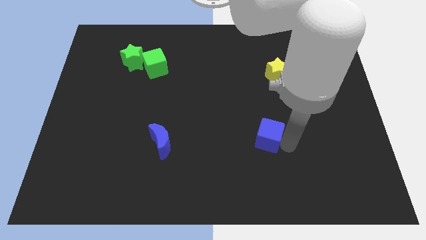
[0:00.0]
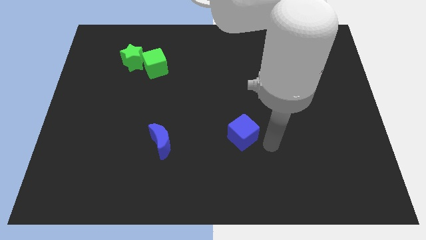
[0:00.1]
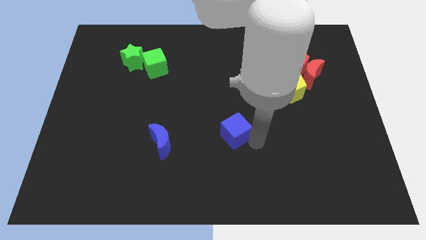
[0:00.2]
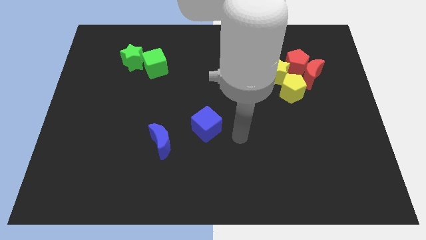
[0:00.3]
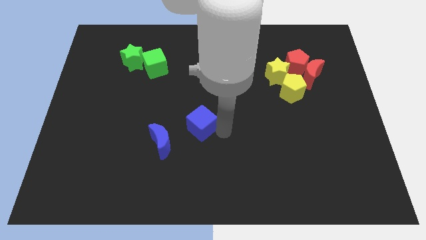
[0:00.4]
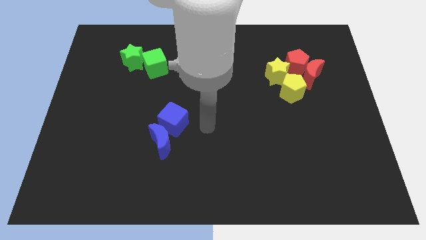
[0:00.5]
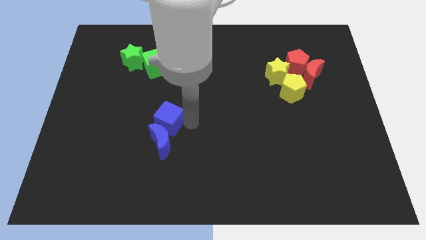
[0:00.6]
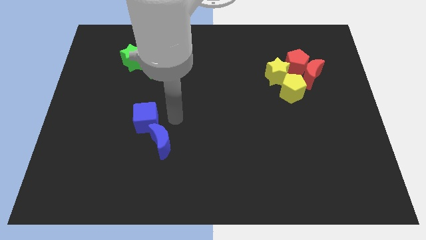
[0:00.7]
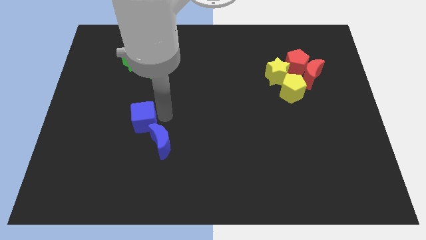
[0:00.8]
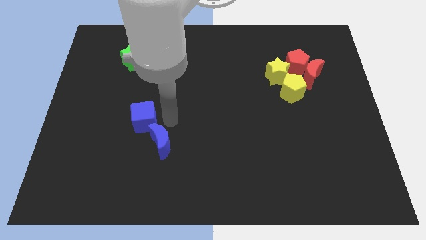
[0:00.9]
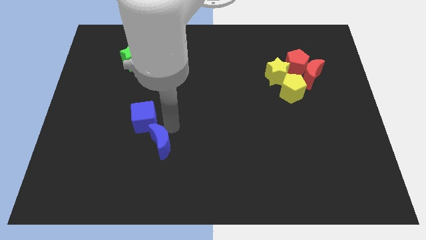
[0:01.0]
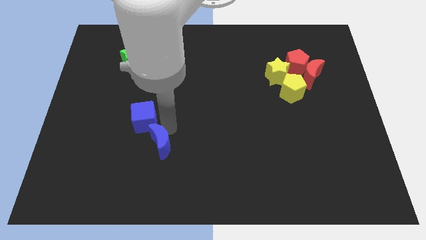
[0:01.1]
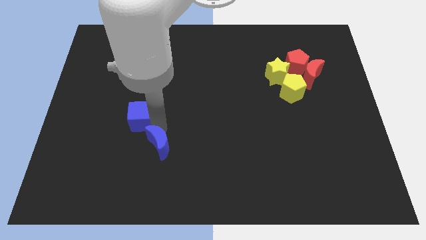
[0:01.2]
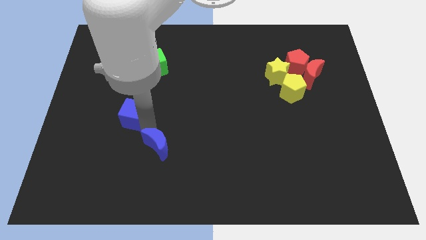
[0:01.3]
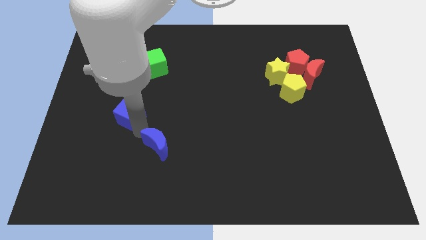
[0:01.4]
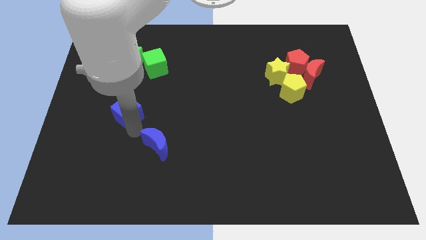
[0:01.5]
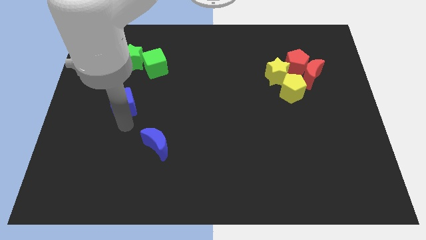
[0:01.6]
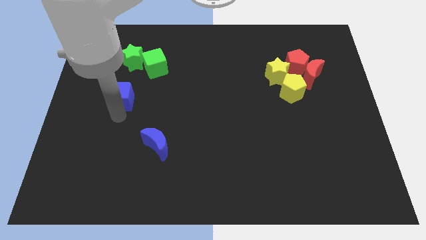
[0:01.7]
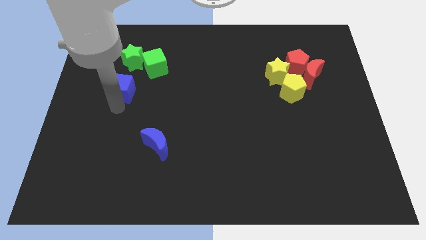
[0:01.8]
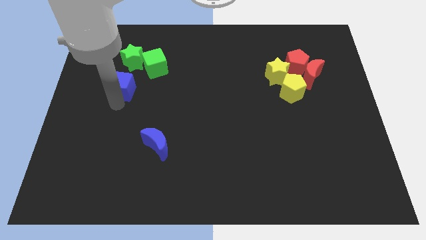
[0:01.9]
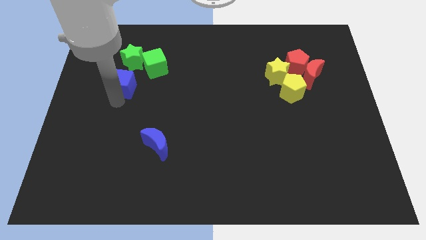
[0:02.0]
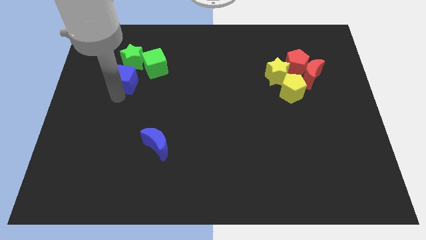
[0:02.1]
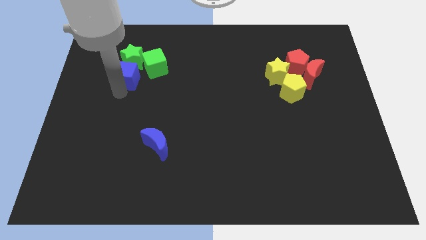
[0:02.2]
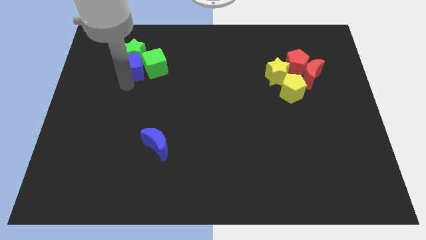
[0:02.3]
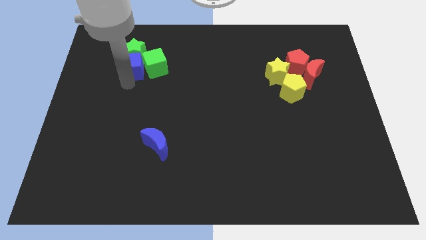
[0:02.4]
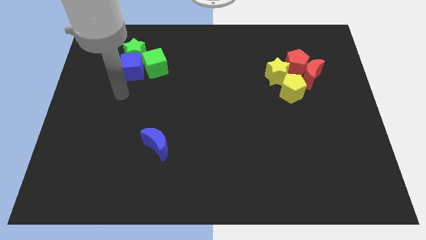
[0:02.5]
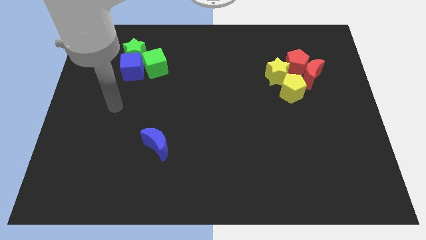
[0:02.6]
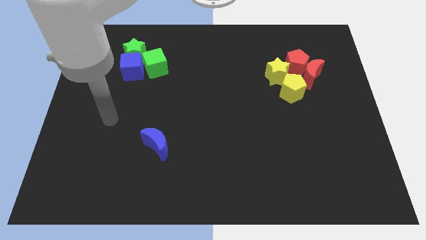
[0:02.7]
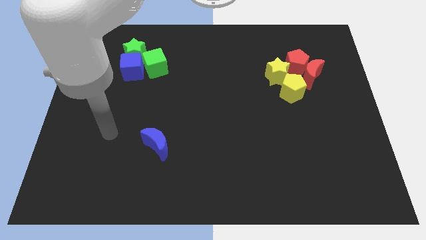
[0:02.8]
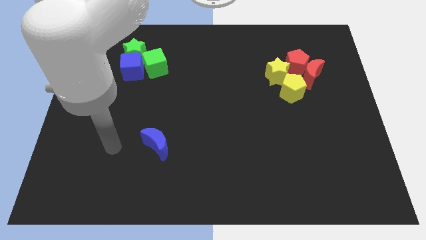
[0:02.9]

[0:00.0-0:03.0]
drag the blue cube and place it below the green star

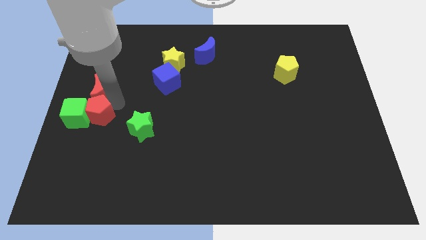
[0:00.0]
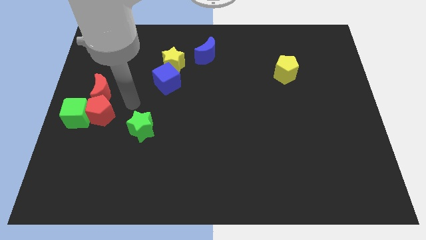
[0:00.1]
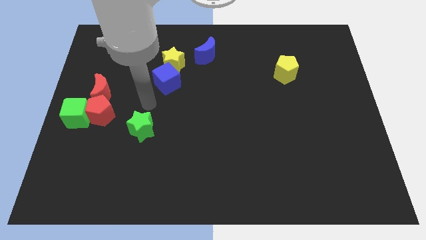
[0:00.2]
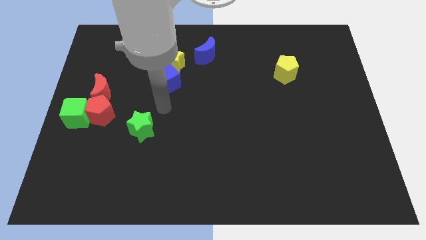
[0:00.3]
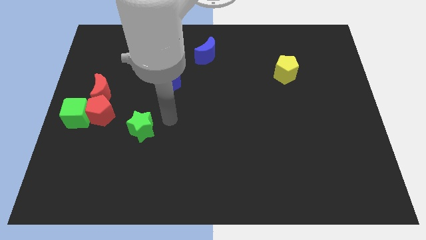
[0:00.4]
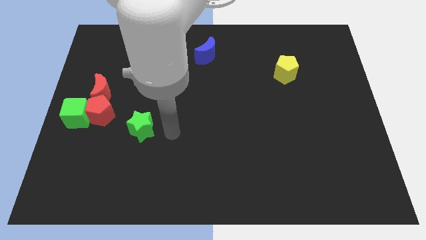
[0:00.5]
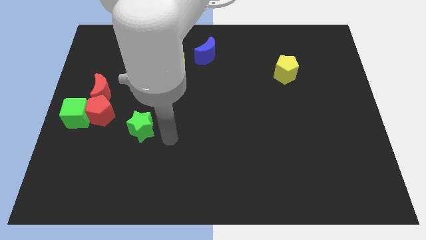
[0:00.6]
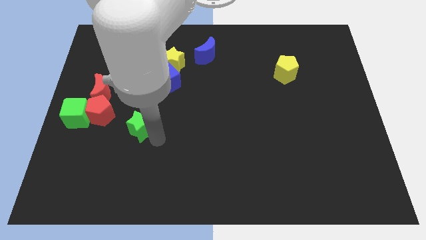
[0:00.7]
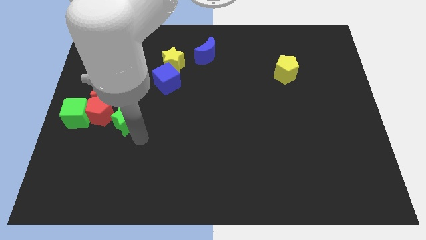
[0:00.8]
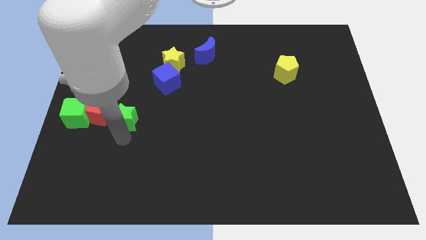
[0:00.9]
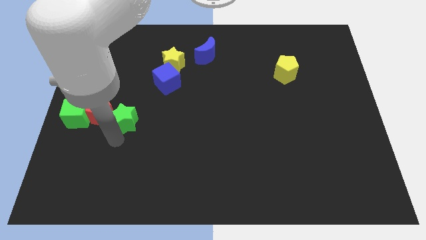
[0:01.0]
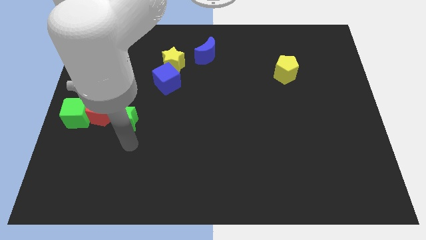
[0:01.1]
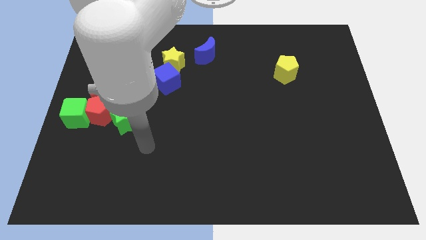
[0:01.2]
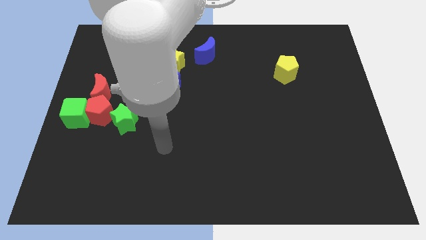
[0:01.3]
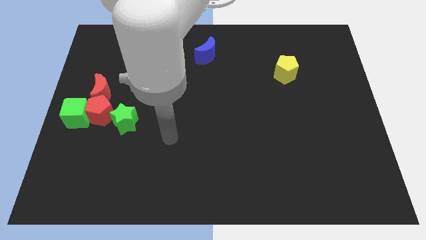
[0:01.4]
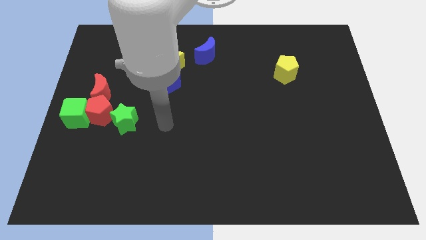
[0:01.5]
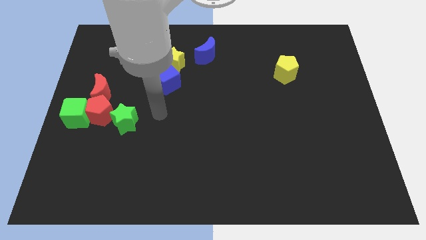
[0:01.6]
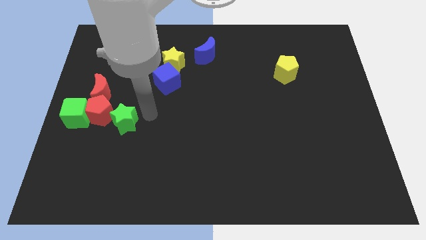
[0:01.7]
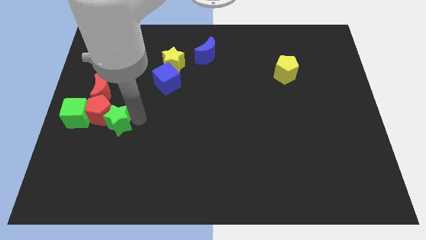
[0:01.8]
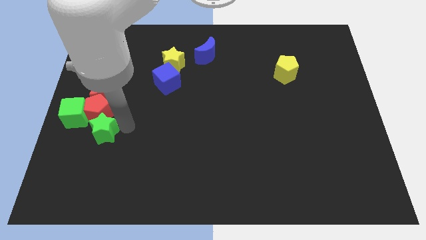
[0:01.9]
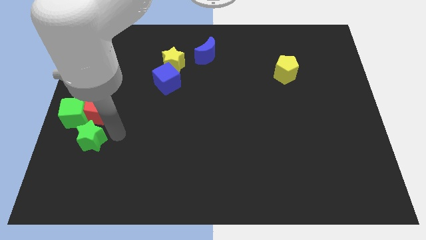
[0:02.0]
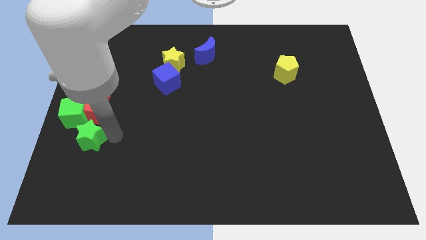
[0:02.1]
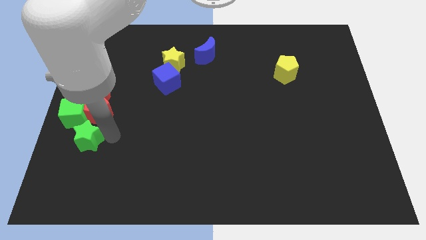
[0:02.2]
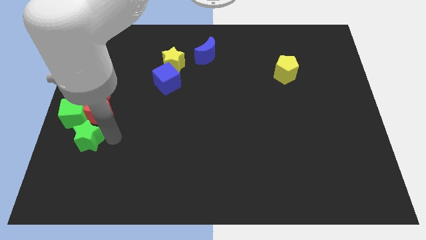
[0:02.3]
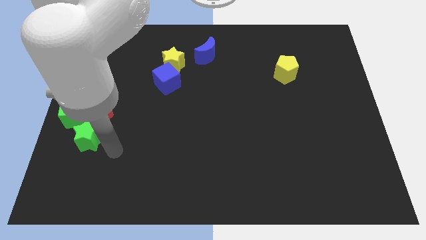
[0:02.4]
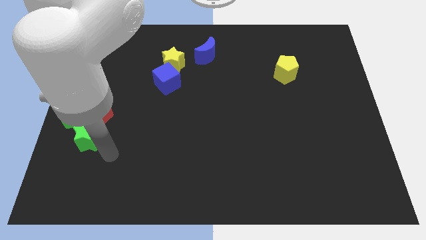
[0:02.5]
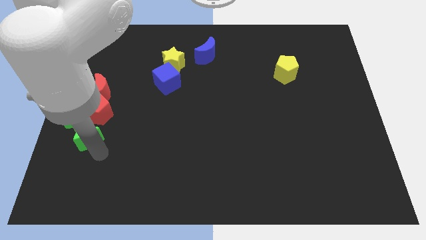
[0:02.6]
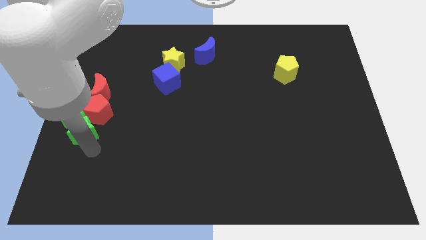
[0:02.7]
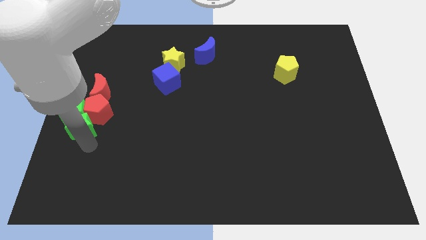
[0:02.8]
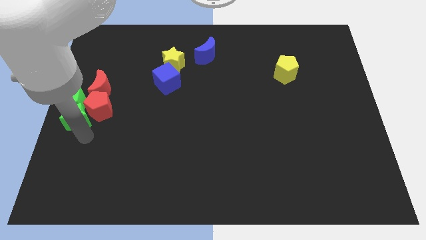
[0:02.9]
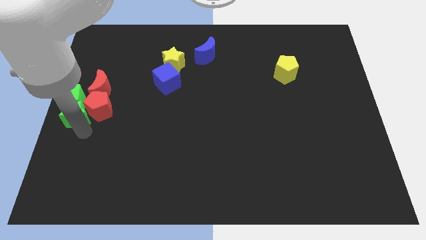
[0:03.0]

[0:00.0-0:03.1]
push the green star into the green cube

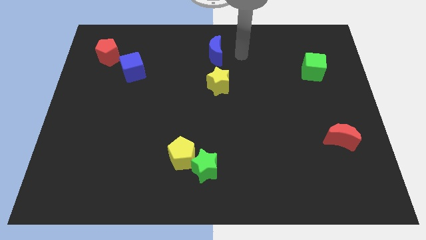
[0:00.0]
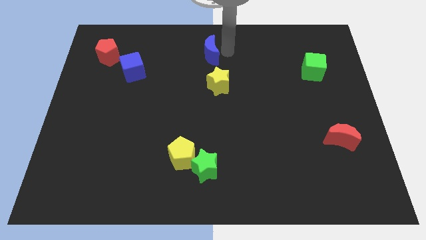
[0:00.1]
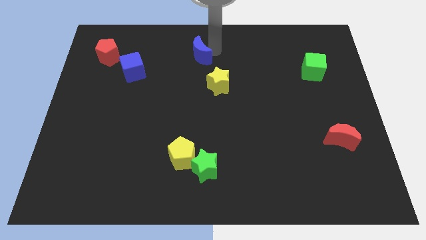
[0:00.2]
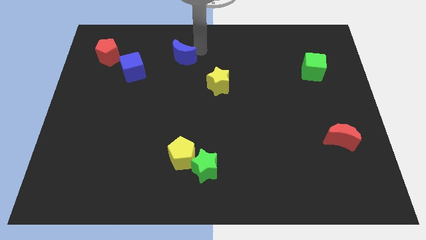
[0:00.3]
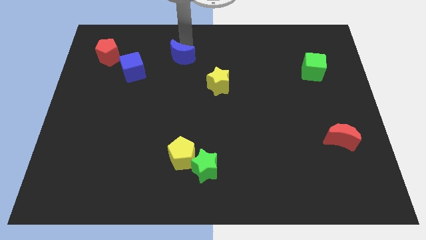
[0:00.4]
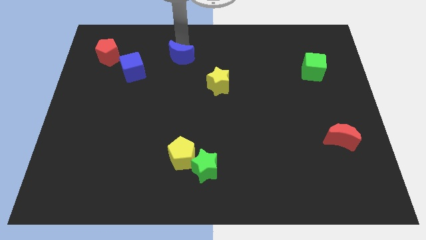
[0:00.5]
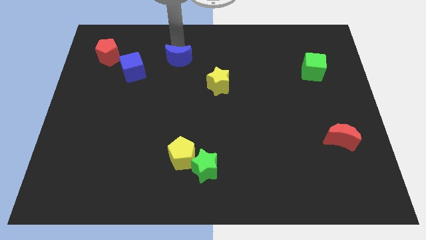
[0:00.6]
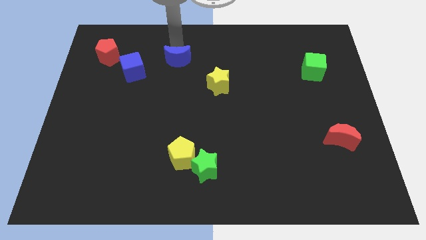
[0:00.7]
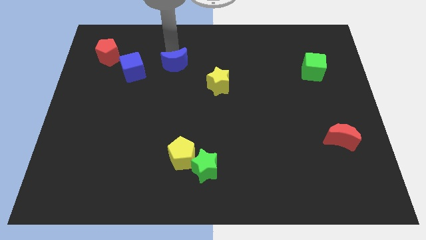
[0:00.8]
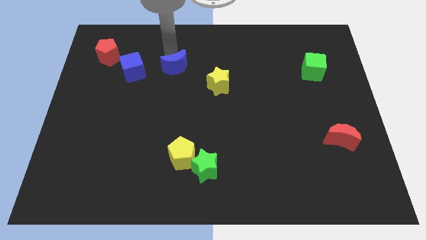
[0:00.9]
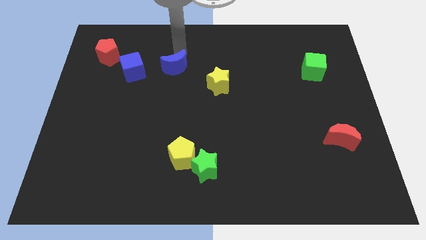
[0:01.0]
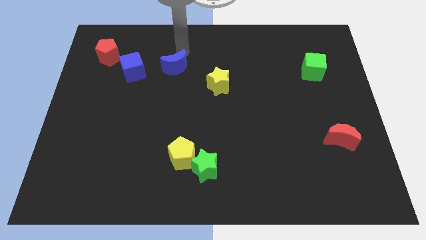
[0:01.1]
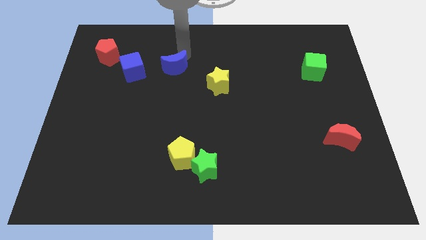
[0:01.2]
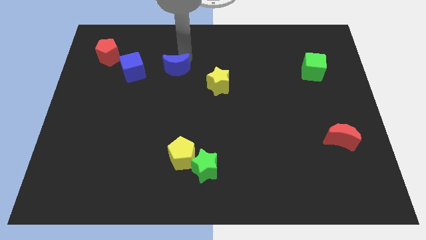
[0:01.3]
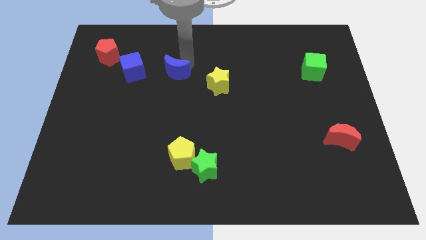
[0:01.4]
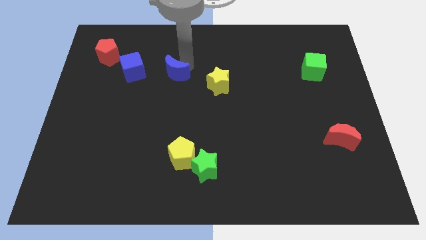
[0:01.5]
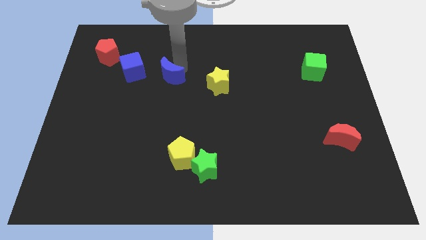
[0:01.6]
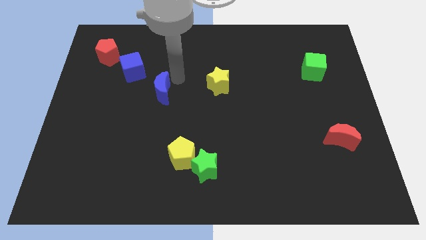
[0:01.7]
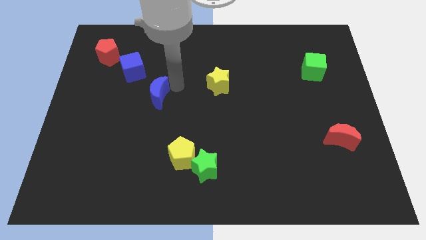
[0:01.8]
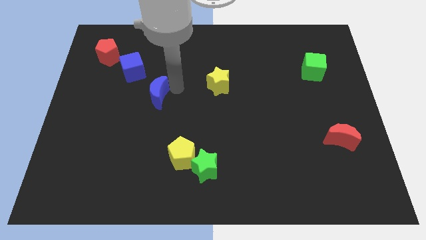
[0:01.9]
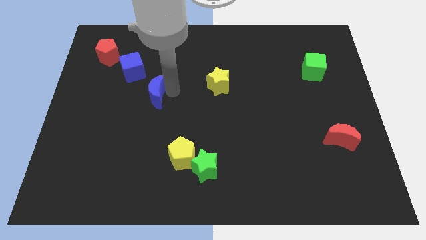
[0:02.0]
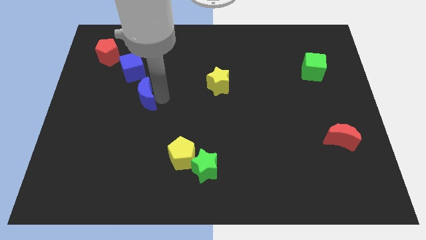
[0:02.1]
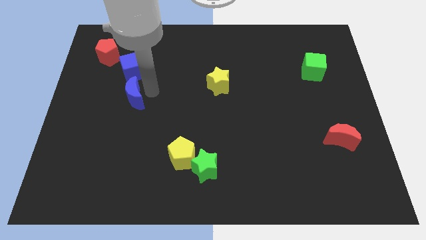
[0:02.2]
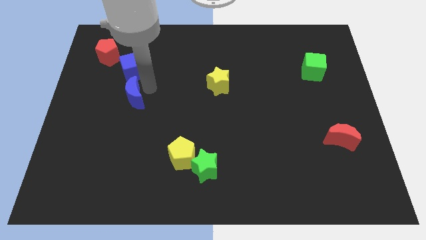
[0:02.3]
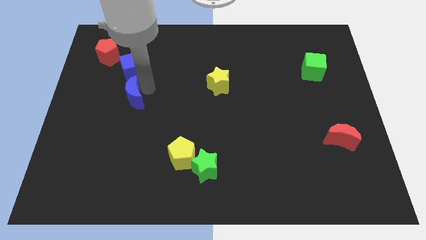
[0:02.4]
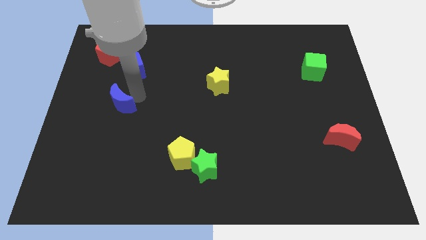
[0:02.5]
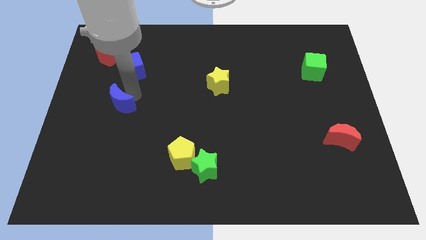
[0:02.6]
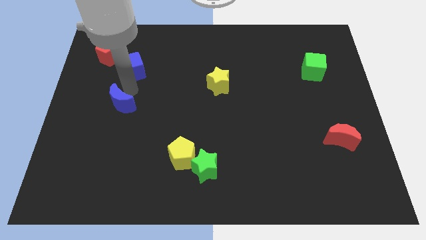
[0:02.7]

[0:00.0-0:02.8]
move the blue crescent below the blue cube
